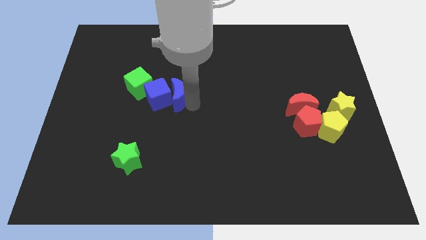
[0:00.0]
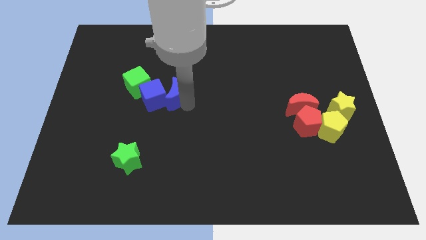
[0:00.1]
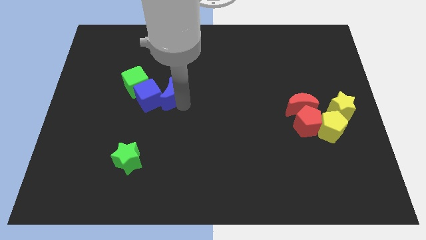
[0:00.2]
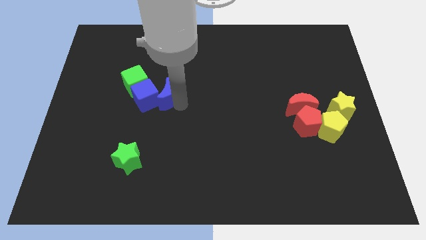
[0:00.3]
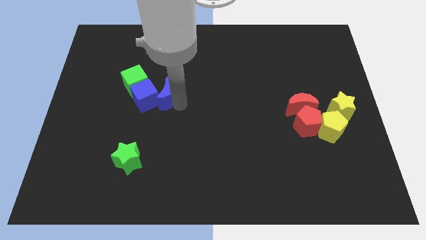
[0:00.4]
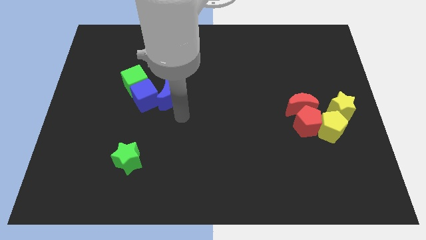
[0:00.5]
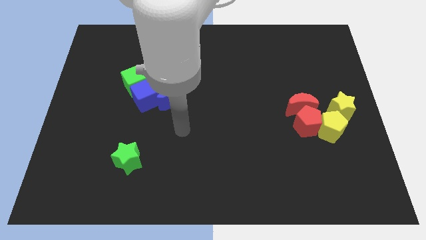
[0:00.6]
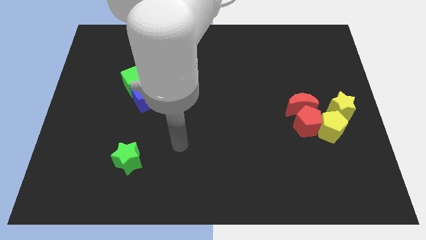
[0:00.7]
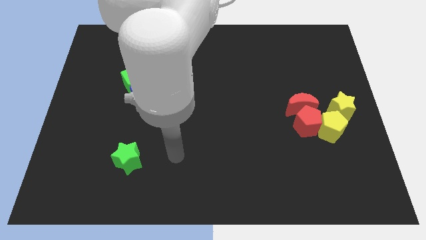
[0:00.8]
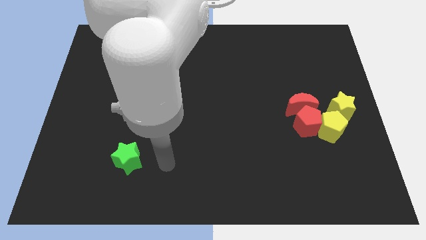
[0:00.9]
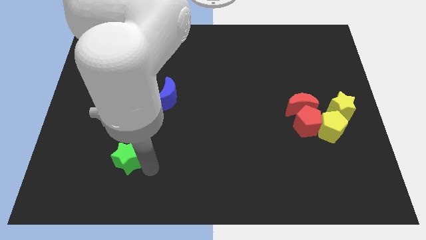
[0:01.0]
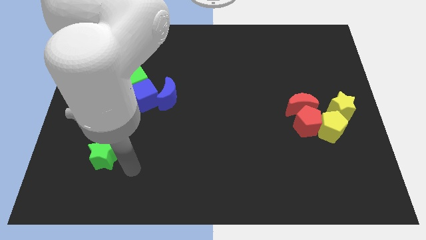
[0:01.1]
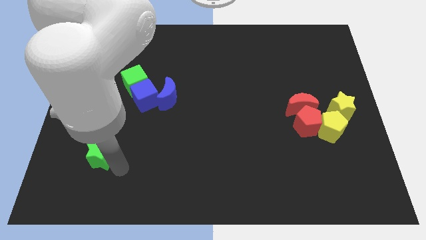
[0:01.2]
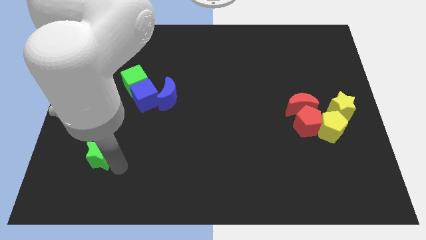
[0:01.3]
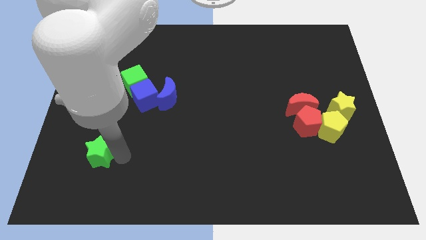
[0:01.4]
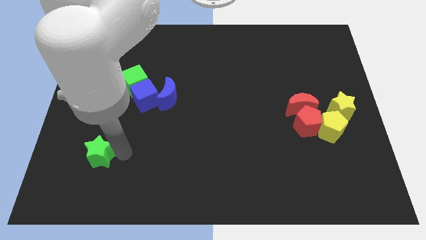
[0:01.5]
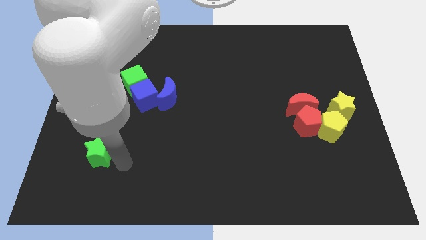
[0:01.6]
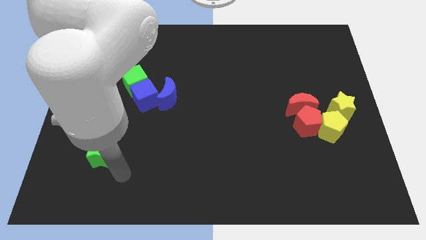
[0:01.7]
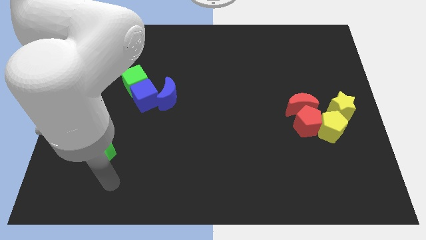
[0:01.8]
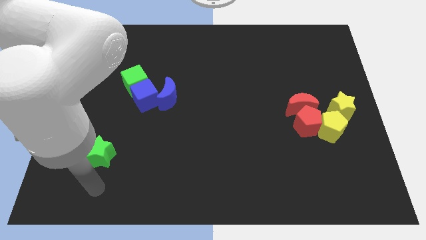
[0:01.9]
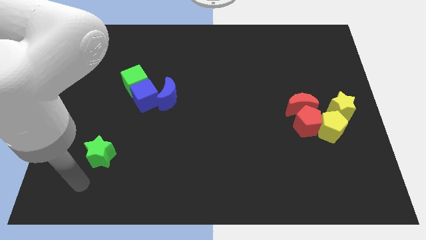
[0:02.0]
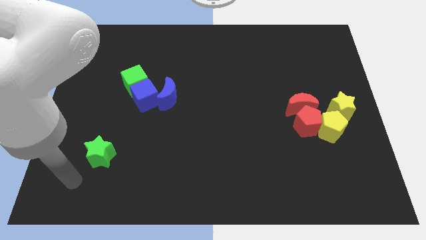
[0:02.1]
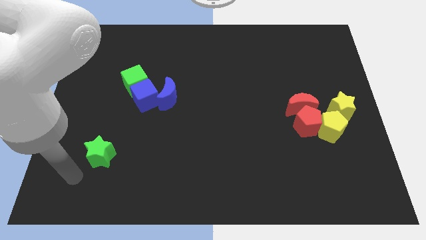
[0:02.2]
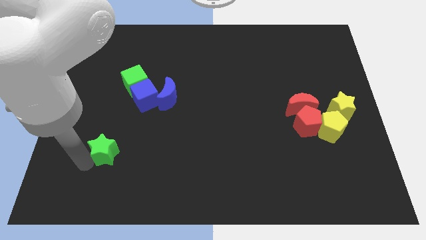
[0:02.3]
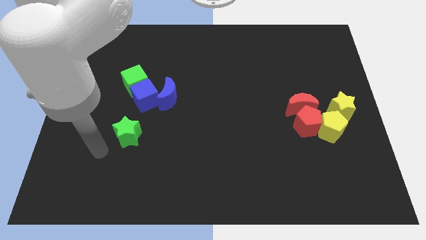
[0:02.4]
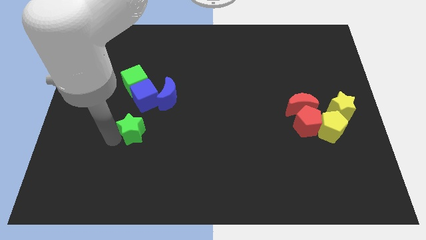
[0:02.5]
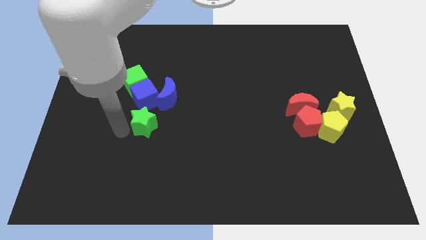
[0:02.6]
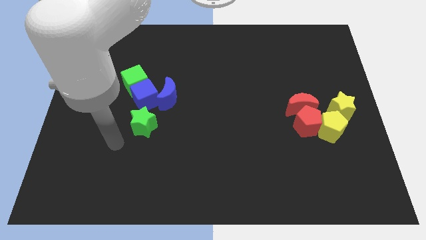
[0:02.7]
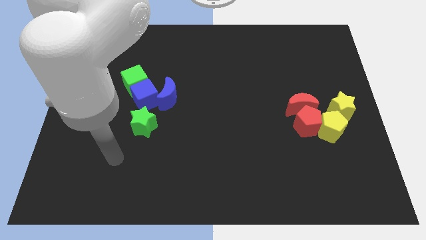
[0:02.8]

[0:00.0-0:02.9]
place the green star down to the blue cube

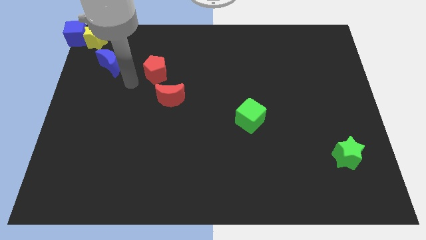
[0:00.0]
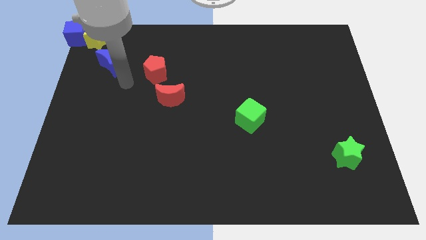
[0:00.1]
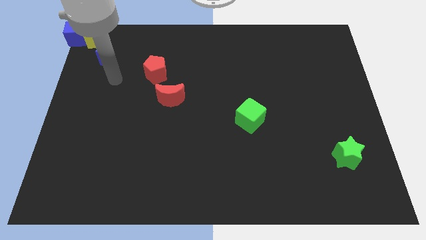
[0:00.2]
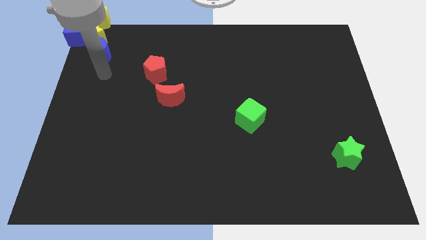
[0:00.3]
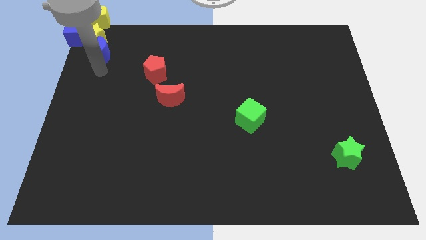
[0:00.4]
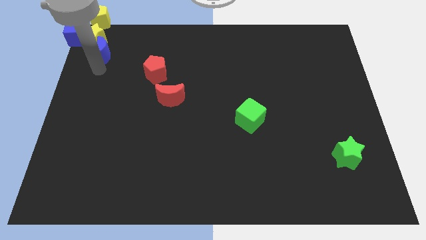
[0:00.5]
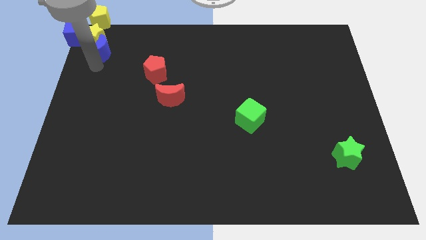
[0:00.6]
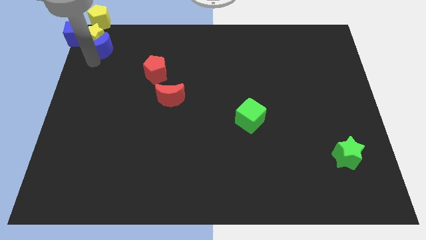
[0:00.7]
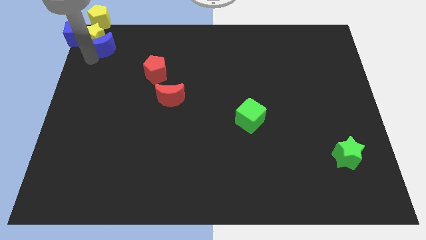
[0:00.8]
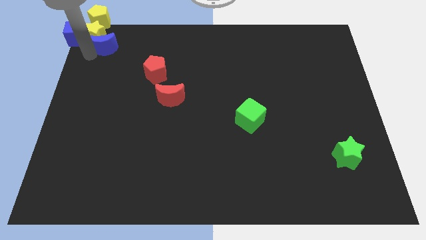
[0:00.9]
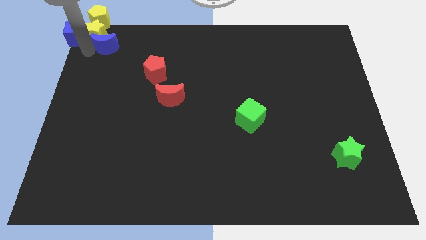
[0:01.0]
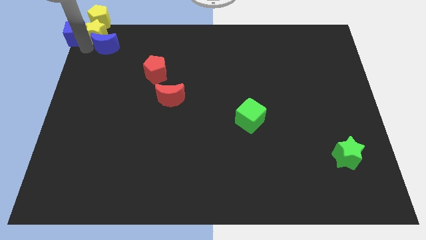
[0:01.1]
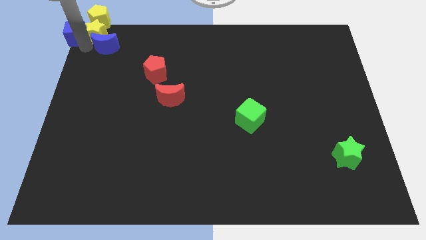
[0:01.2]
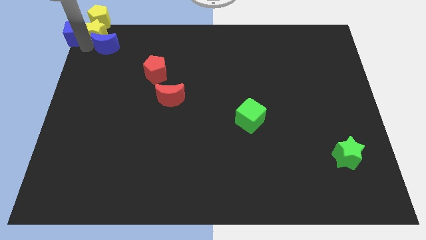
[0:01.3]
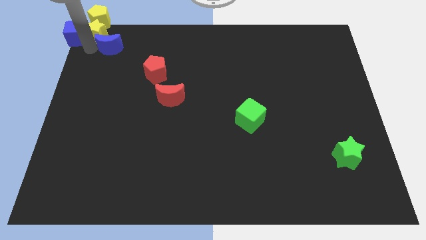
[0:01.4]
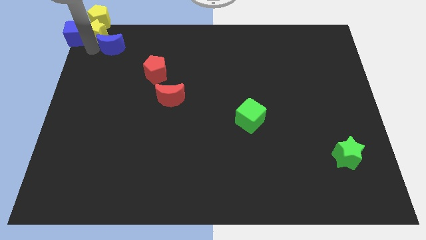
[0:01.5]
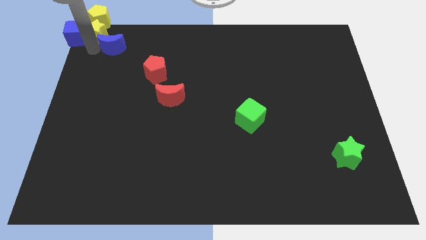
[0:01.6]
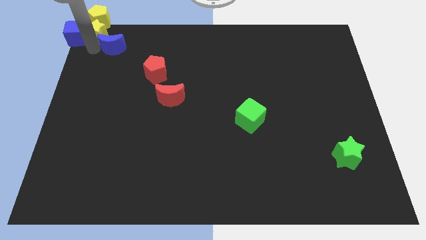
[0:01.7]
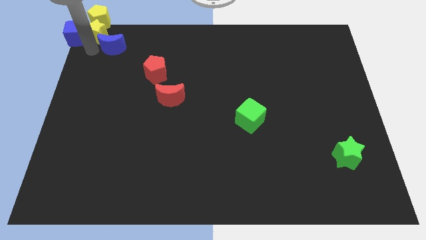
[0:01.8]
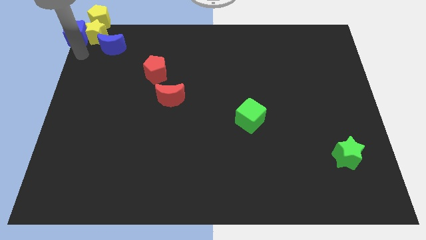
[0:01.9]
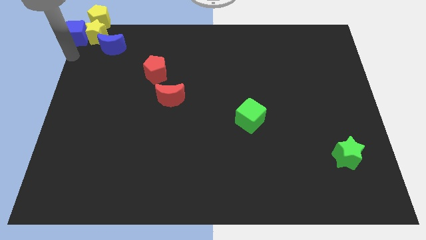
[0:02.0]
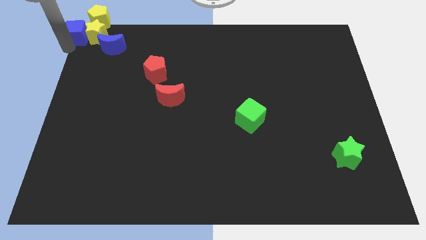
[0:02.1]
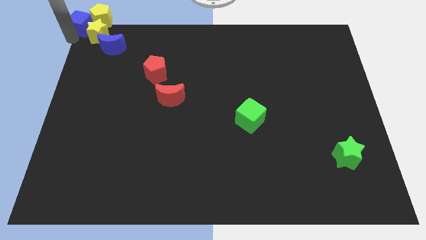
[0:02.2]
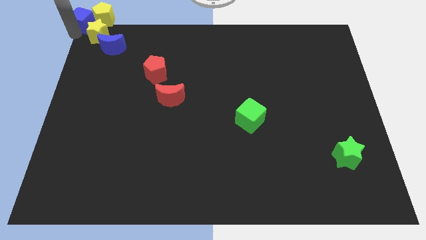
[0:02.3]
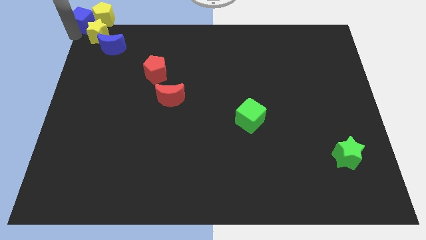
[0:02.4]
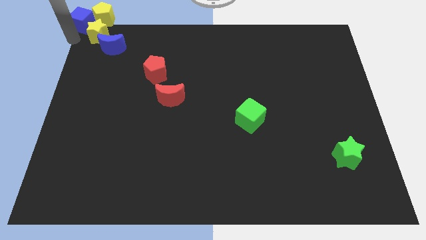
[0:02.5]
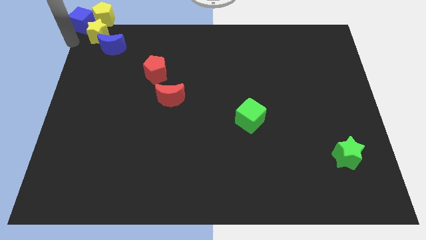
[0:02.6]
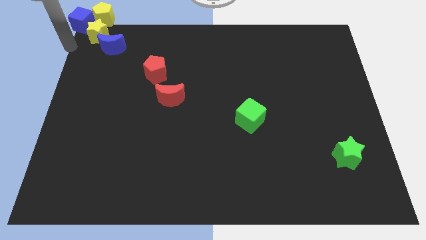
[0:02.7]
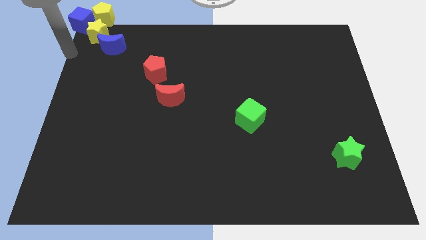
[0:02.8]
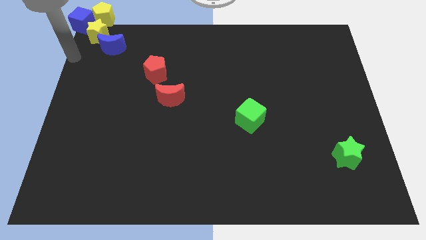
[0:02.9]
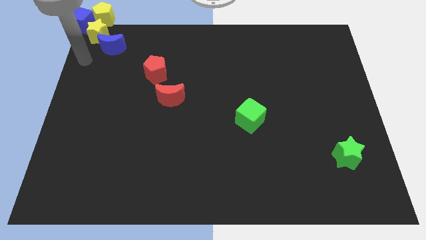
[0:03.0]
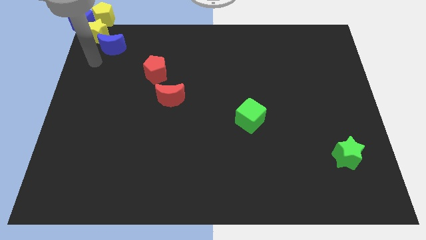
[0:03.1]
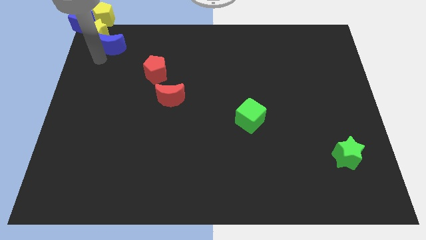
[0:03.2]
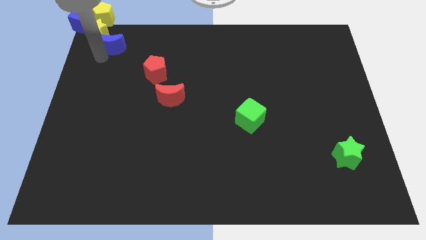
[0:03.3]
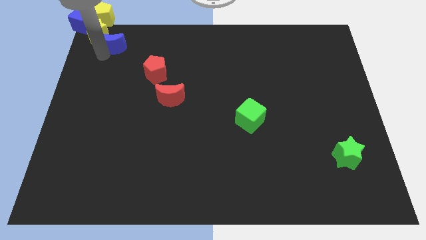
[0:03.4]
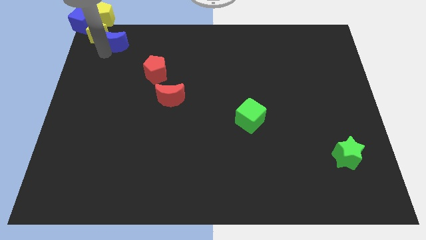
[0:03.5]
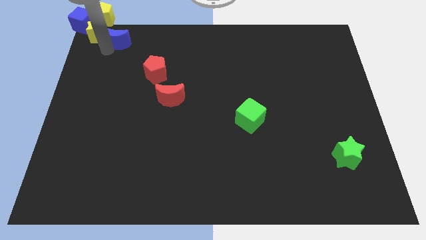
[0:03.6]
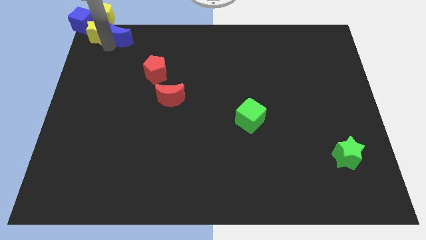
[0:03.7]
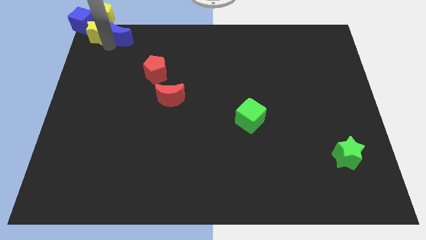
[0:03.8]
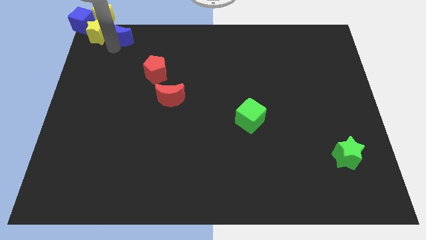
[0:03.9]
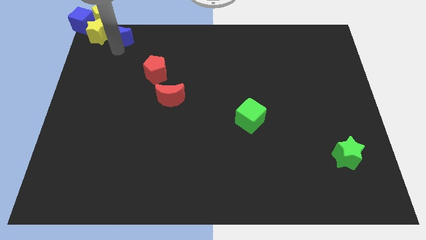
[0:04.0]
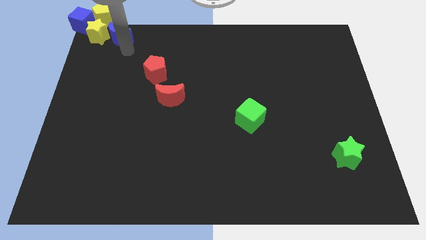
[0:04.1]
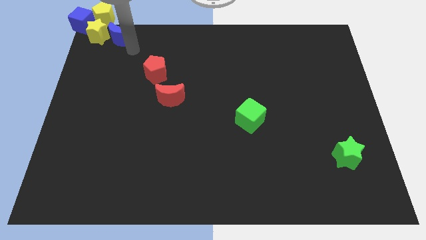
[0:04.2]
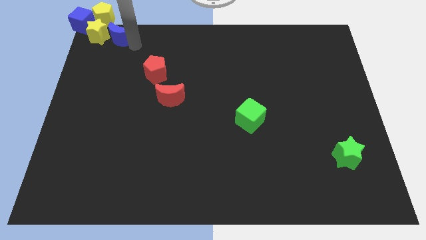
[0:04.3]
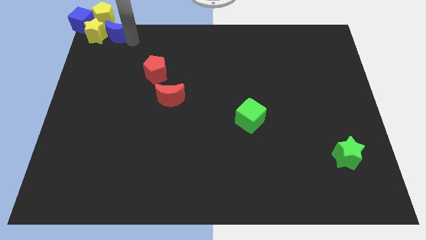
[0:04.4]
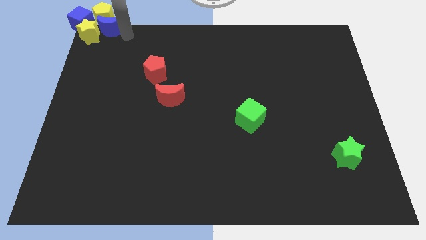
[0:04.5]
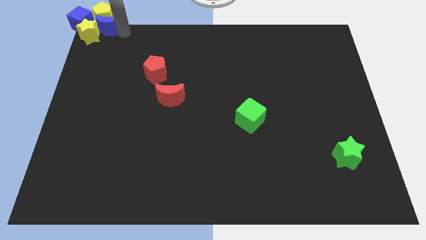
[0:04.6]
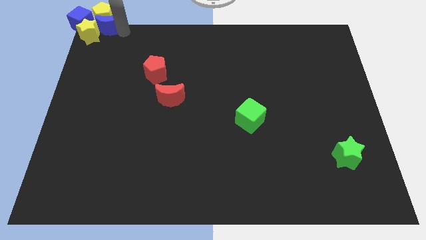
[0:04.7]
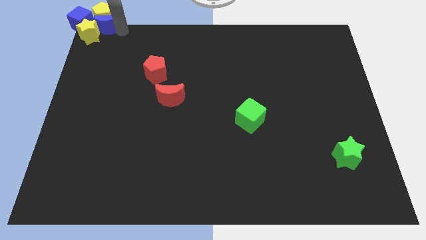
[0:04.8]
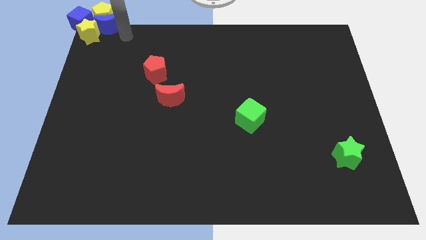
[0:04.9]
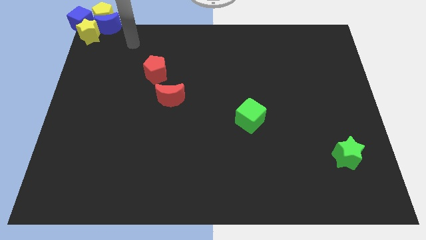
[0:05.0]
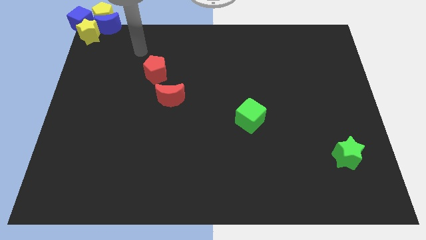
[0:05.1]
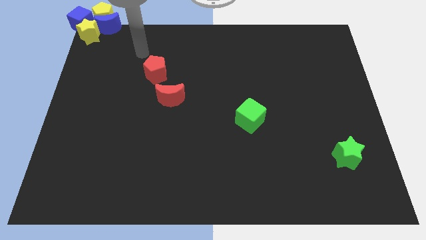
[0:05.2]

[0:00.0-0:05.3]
put all the blue and yellow blocks on the top left of the board

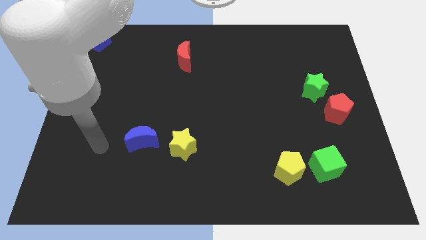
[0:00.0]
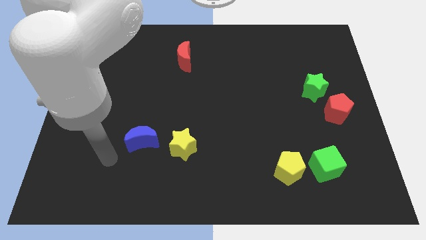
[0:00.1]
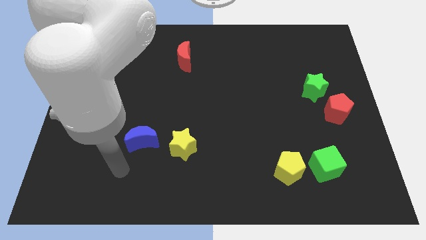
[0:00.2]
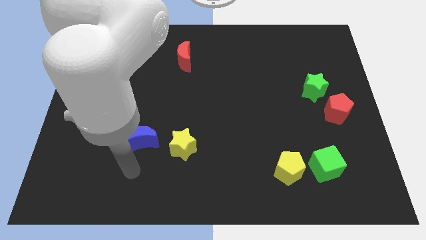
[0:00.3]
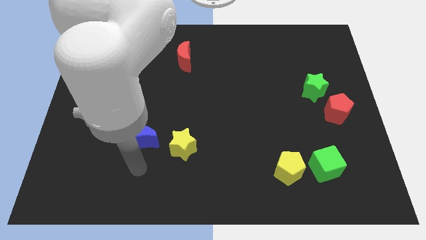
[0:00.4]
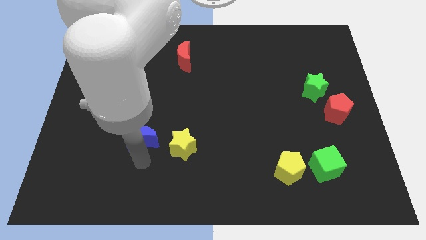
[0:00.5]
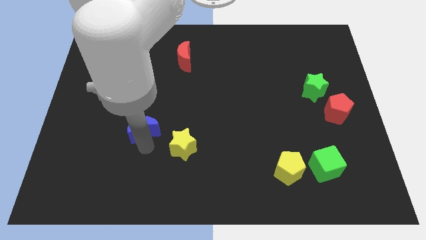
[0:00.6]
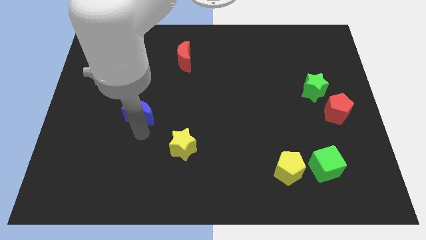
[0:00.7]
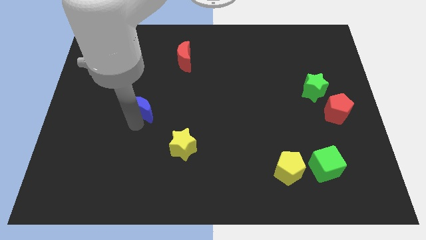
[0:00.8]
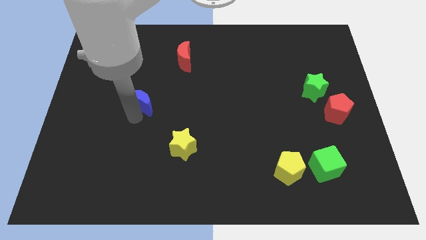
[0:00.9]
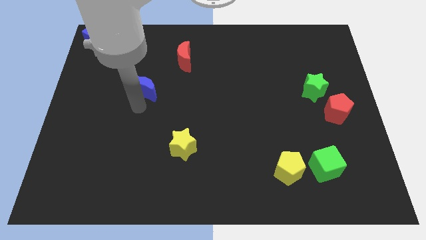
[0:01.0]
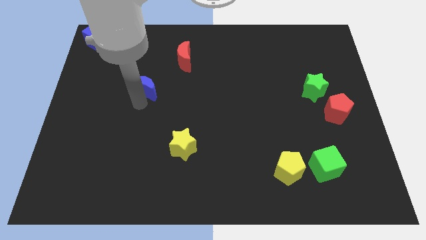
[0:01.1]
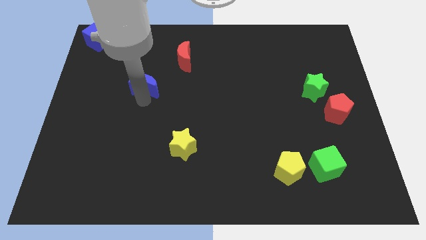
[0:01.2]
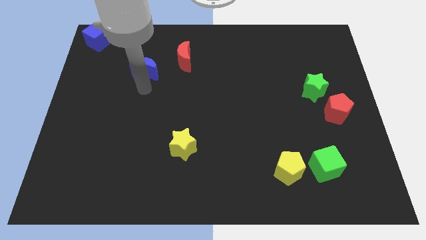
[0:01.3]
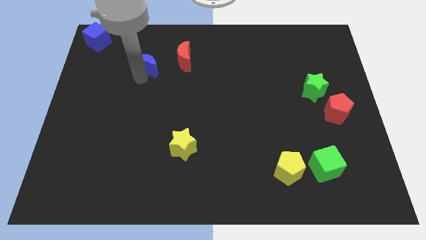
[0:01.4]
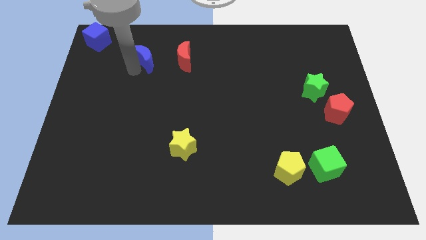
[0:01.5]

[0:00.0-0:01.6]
place blue crescent left side of red crescent
